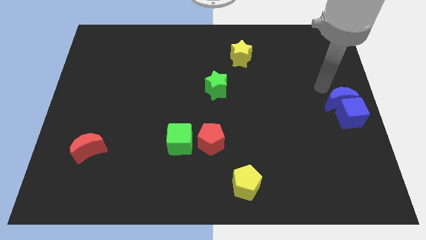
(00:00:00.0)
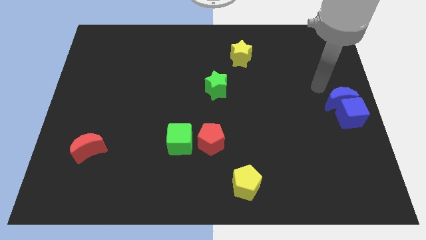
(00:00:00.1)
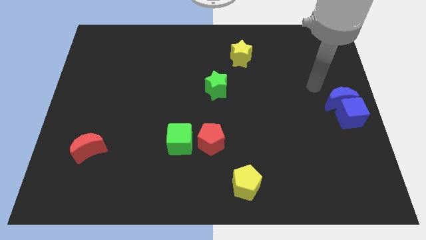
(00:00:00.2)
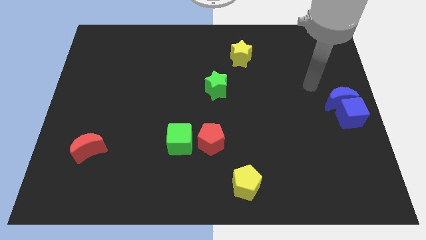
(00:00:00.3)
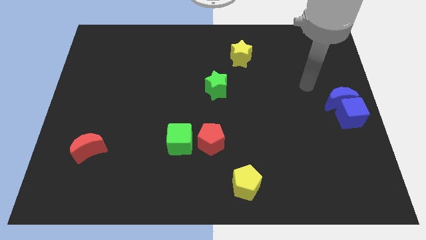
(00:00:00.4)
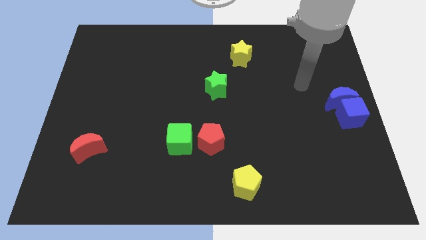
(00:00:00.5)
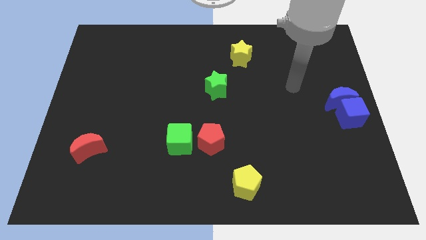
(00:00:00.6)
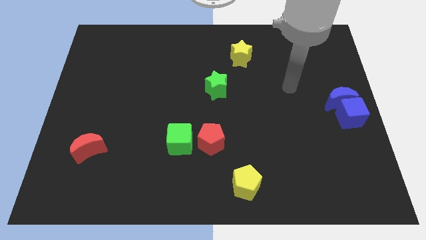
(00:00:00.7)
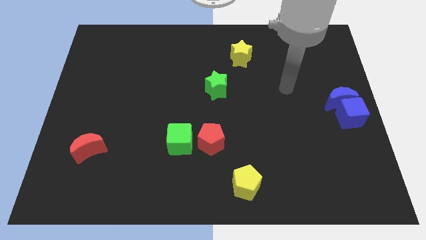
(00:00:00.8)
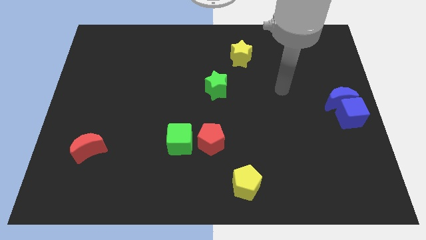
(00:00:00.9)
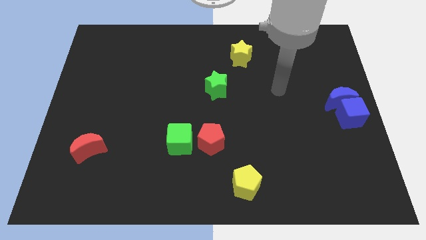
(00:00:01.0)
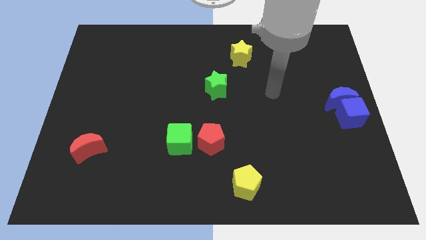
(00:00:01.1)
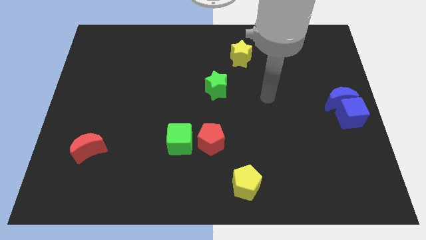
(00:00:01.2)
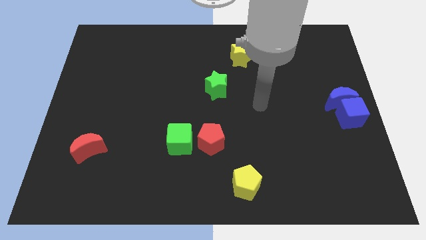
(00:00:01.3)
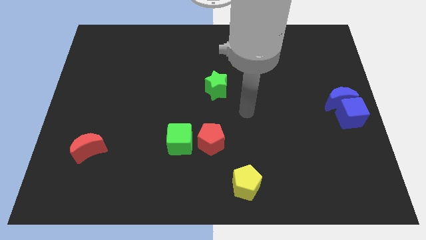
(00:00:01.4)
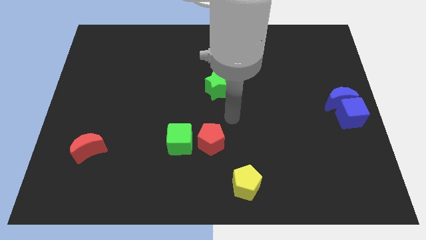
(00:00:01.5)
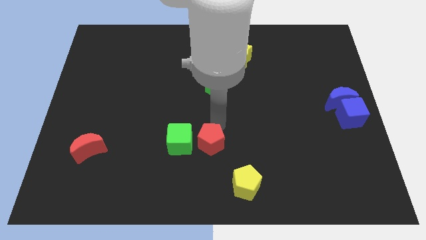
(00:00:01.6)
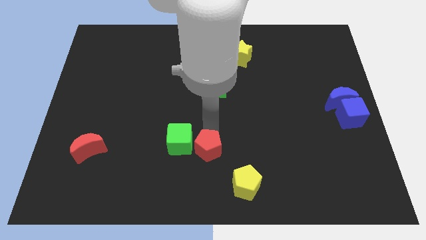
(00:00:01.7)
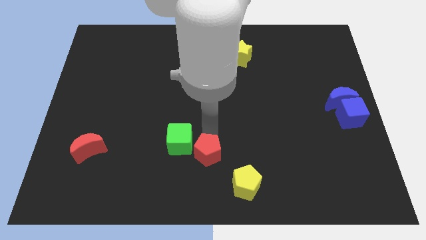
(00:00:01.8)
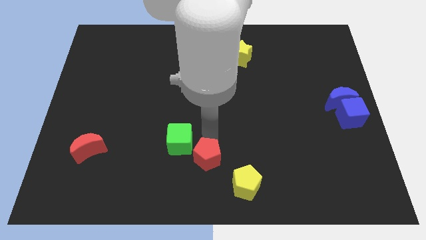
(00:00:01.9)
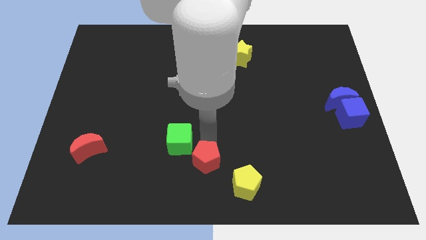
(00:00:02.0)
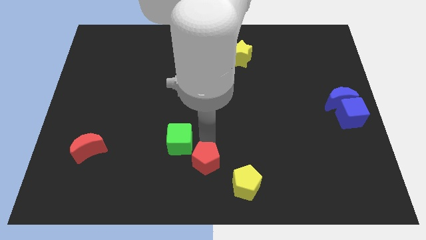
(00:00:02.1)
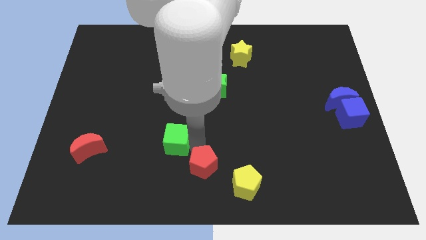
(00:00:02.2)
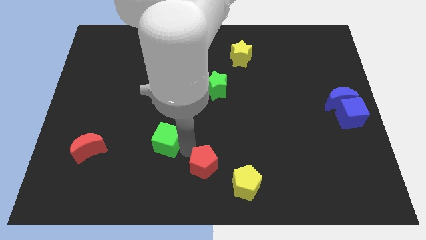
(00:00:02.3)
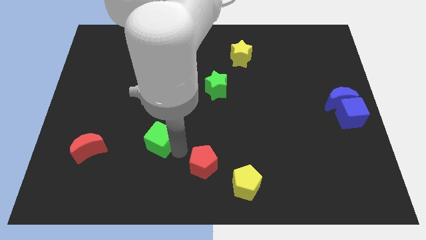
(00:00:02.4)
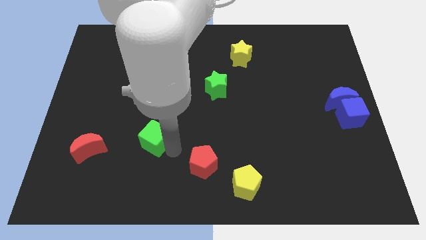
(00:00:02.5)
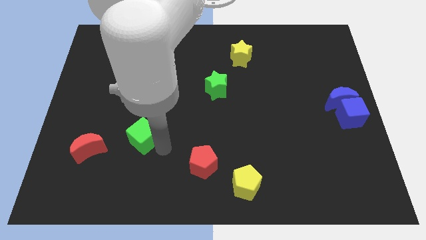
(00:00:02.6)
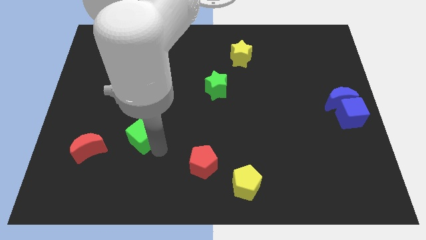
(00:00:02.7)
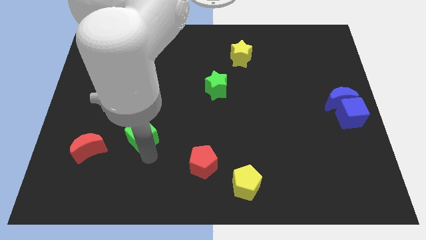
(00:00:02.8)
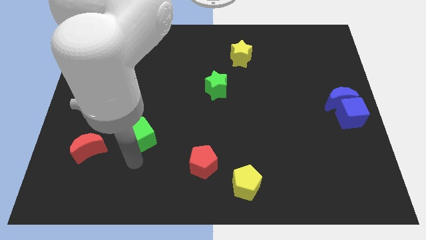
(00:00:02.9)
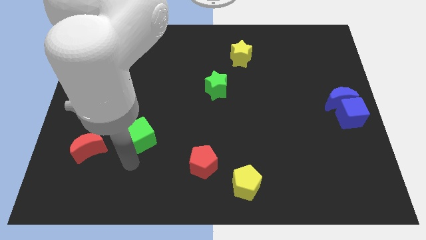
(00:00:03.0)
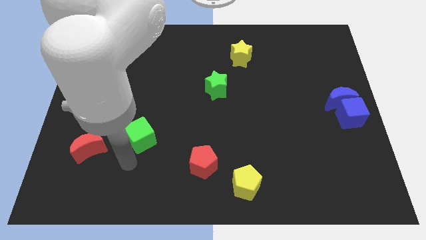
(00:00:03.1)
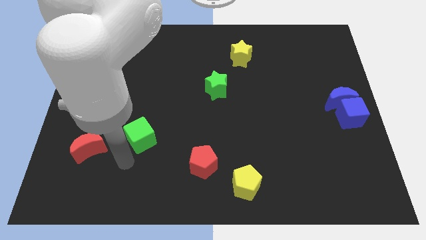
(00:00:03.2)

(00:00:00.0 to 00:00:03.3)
push the green cube and red pentagon diagonally on the top left side of the yellow pentagon

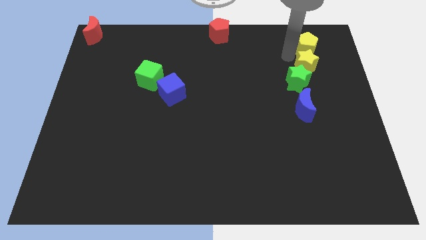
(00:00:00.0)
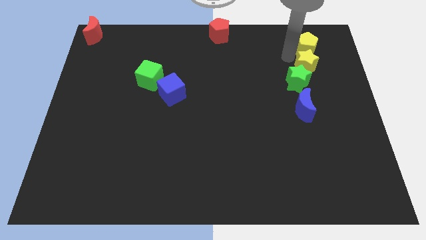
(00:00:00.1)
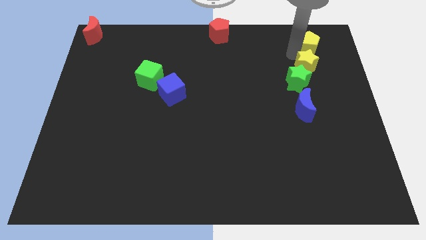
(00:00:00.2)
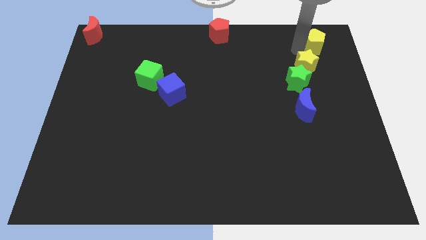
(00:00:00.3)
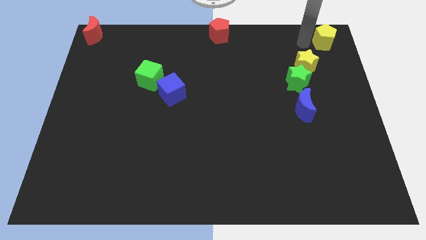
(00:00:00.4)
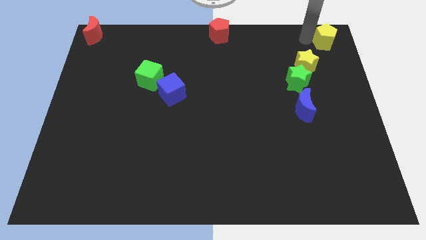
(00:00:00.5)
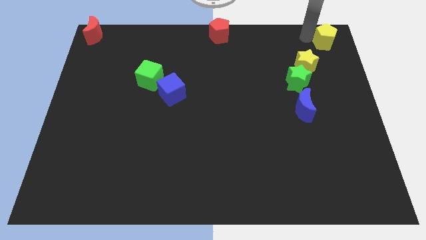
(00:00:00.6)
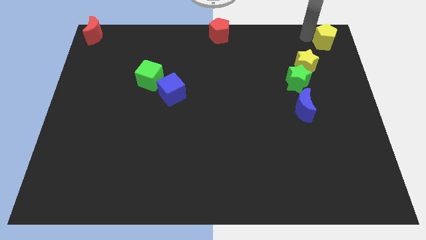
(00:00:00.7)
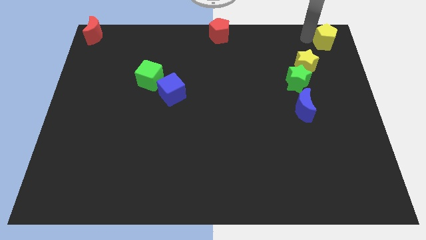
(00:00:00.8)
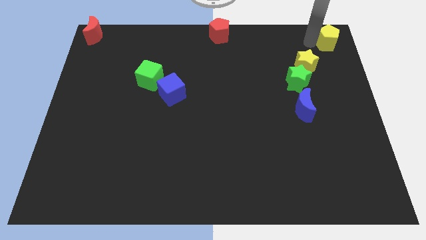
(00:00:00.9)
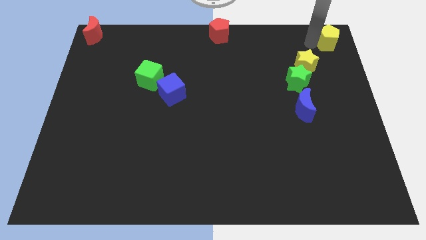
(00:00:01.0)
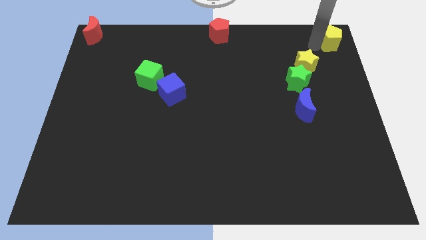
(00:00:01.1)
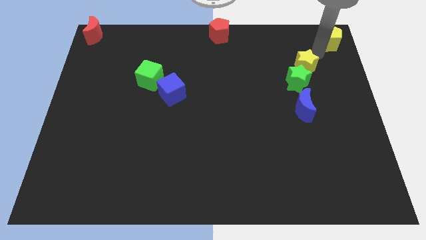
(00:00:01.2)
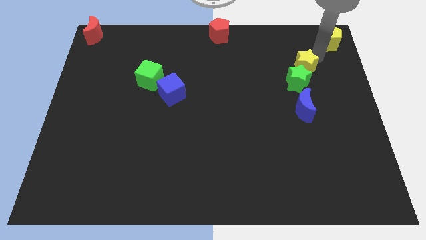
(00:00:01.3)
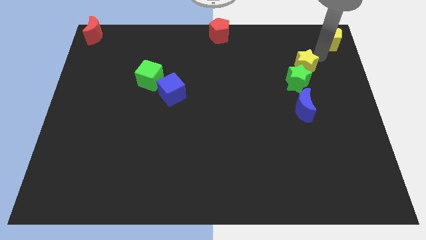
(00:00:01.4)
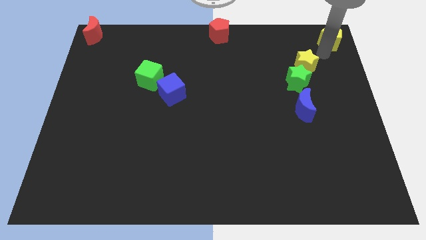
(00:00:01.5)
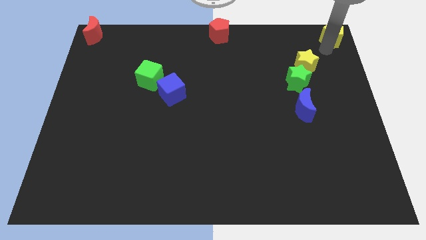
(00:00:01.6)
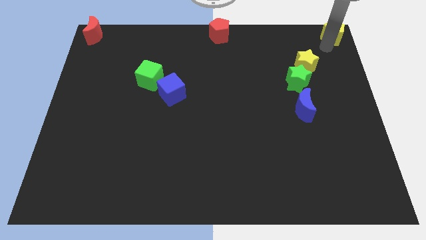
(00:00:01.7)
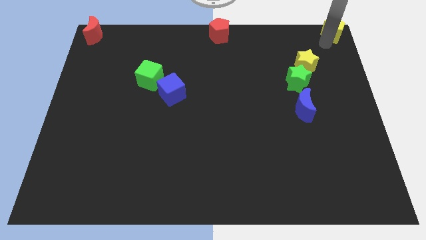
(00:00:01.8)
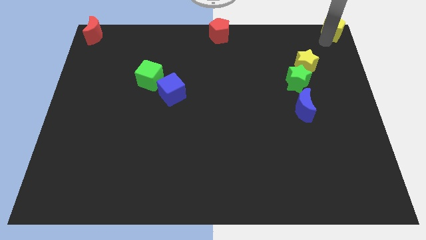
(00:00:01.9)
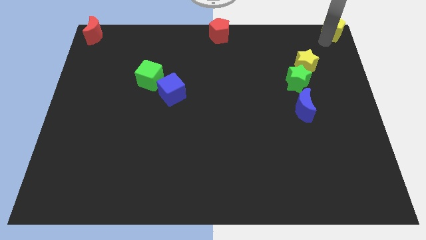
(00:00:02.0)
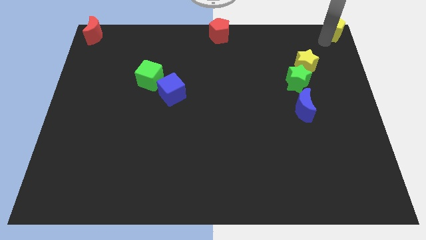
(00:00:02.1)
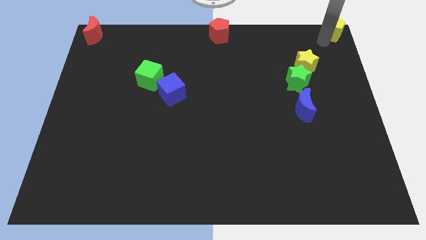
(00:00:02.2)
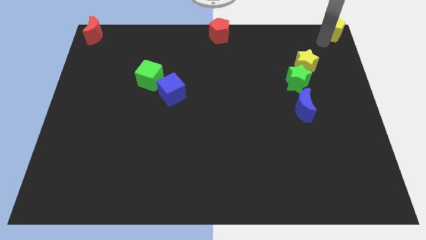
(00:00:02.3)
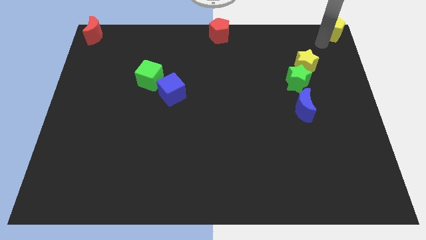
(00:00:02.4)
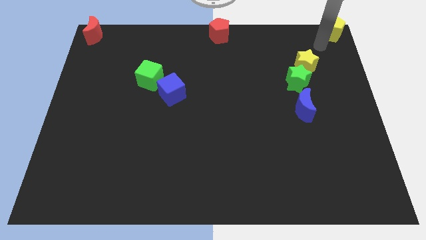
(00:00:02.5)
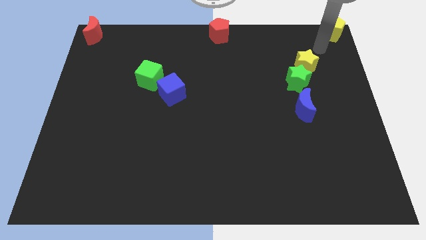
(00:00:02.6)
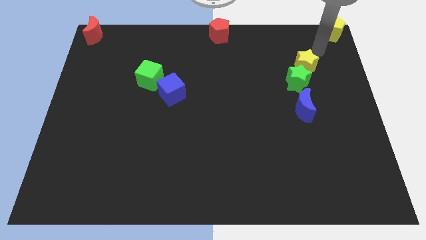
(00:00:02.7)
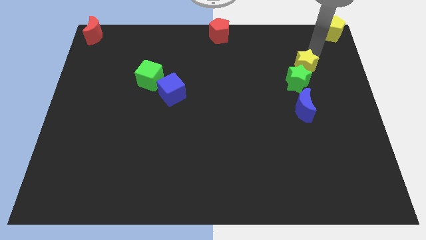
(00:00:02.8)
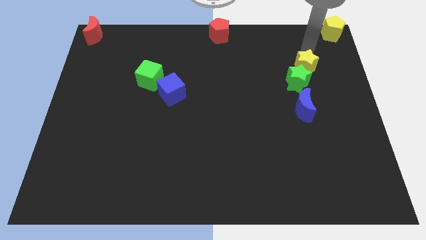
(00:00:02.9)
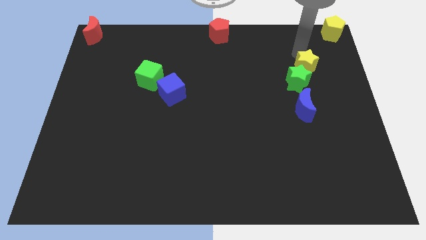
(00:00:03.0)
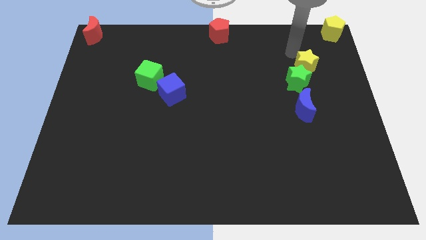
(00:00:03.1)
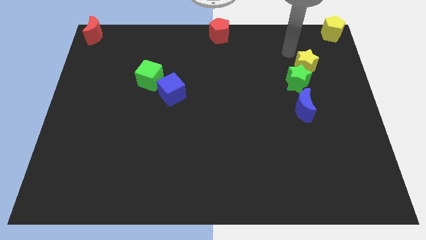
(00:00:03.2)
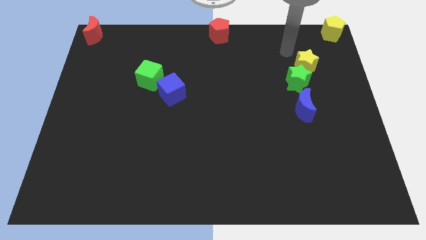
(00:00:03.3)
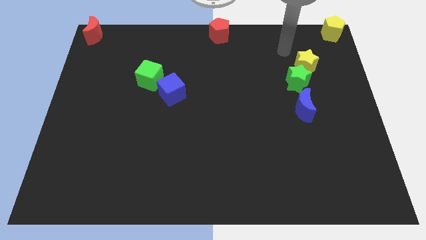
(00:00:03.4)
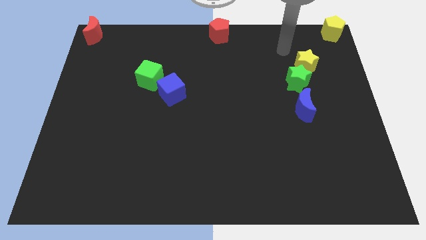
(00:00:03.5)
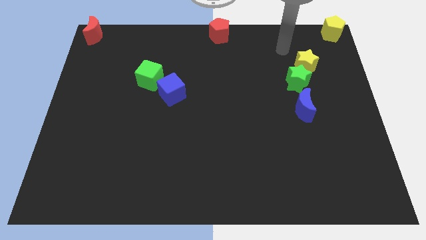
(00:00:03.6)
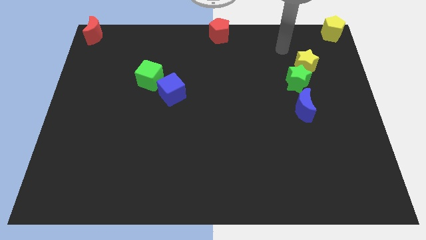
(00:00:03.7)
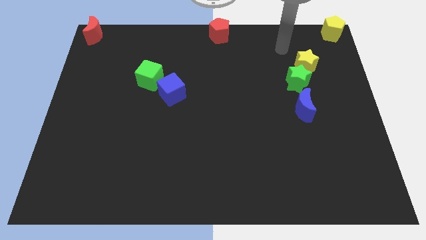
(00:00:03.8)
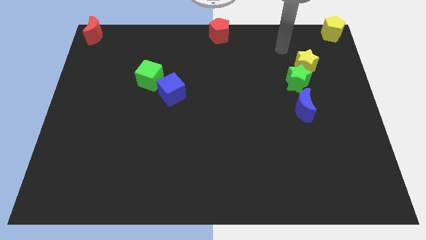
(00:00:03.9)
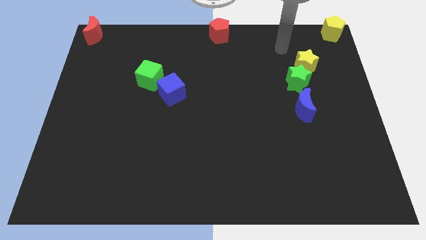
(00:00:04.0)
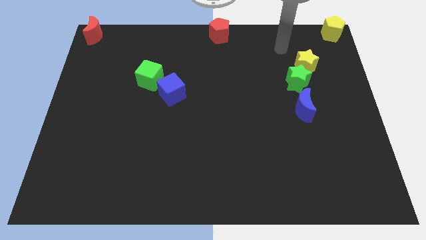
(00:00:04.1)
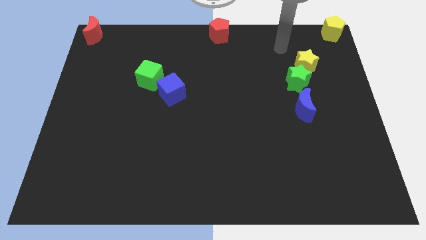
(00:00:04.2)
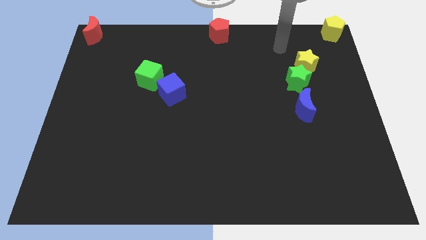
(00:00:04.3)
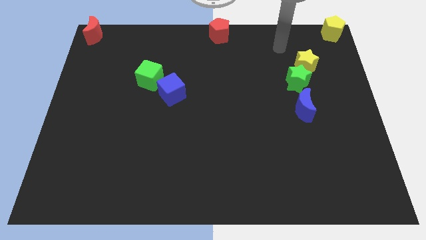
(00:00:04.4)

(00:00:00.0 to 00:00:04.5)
place the yellow pentagon towards the top right corner of the board

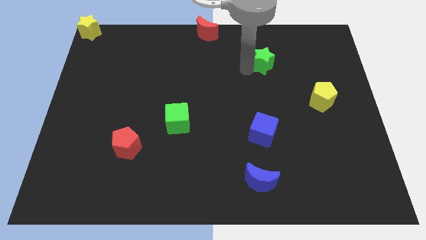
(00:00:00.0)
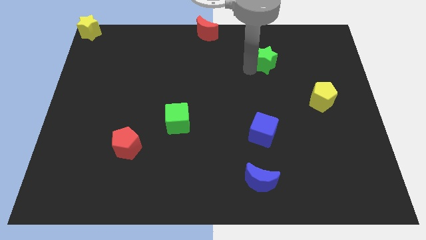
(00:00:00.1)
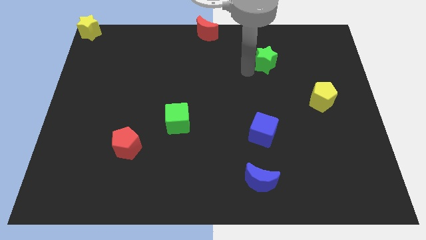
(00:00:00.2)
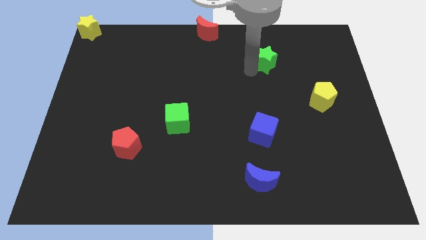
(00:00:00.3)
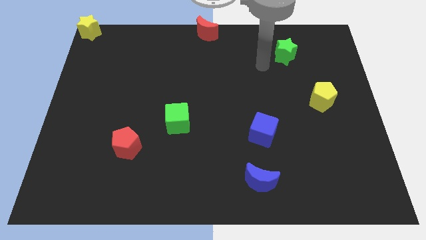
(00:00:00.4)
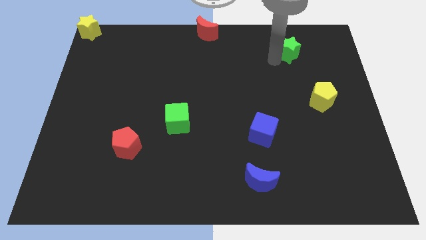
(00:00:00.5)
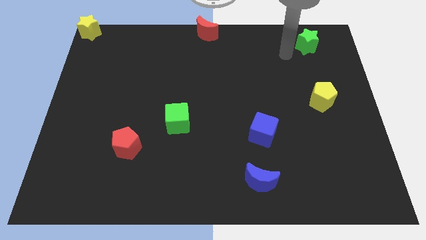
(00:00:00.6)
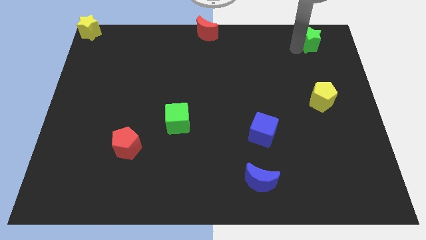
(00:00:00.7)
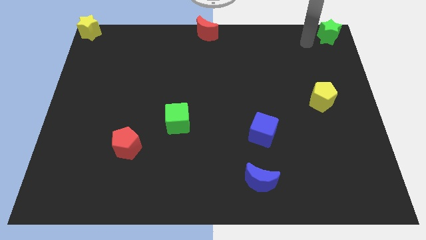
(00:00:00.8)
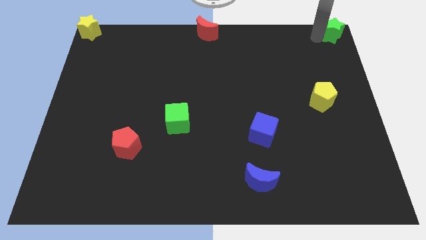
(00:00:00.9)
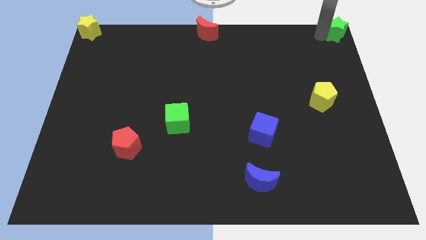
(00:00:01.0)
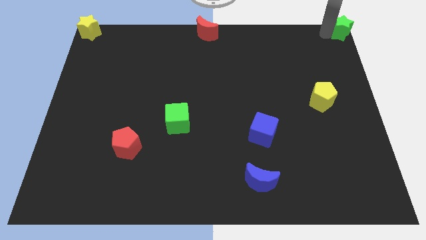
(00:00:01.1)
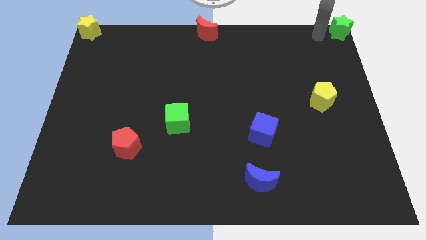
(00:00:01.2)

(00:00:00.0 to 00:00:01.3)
push the green star to the top right side of the corner
